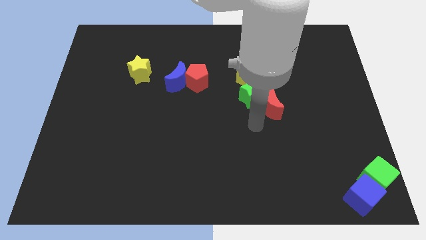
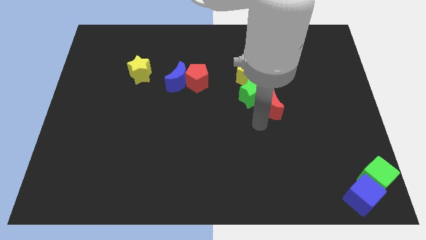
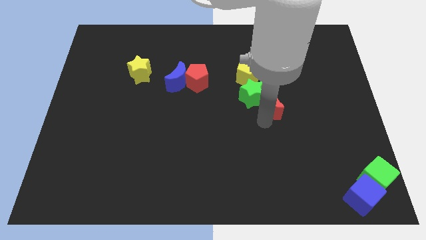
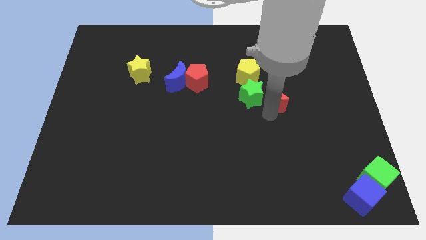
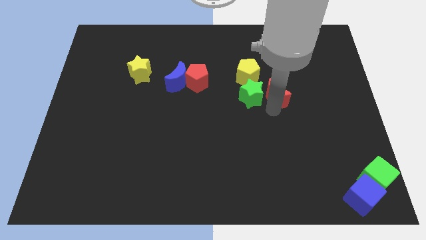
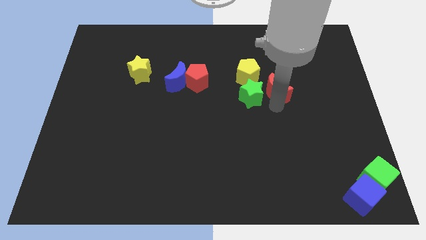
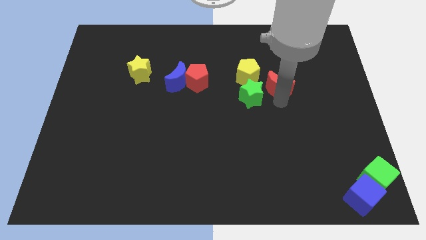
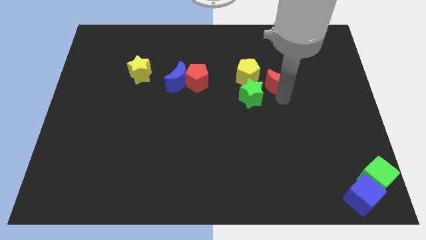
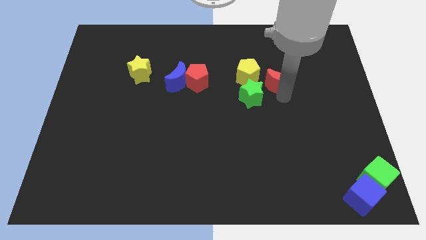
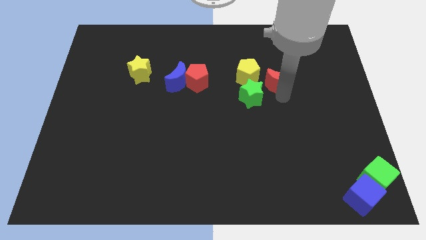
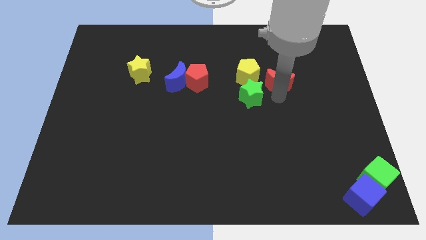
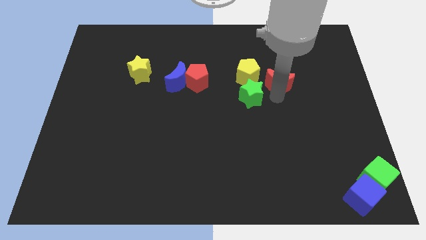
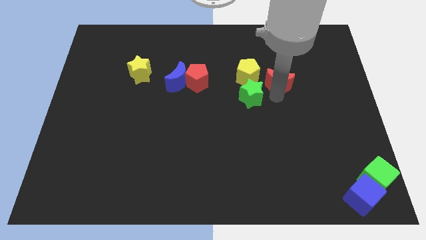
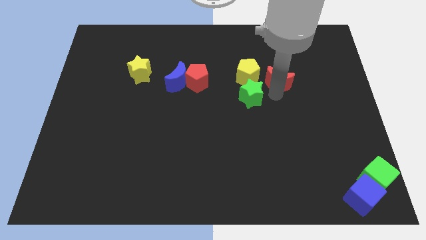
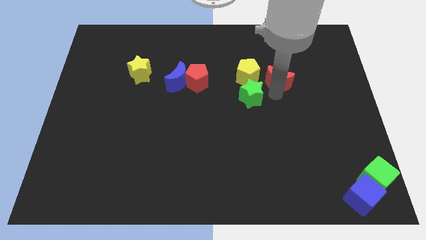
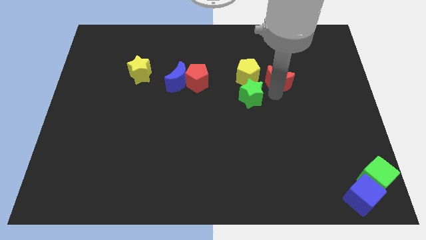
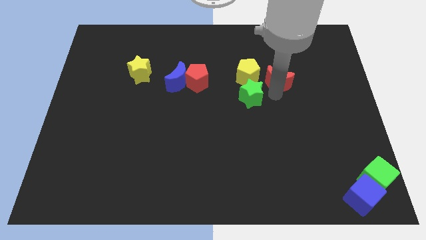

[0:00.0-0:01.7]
move the red crescent to the right of the yellow pentagon

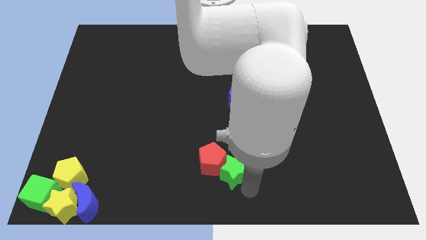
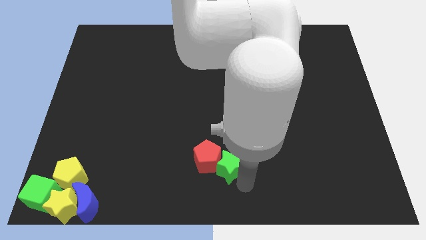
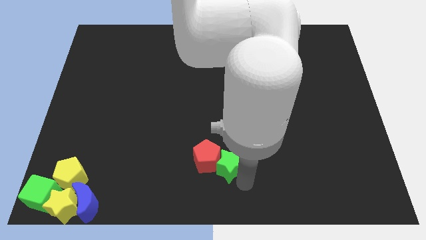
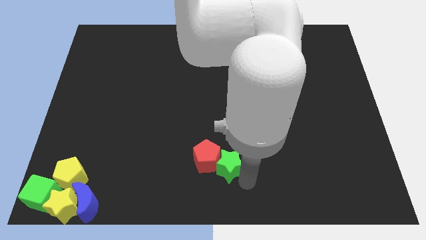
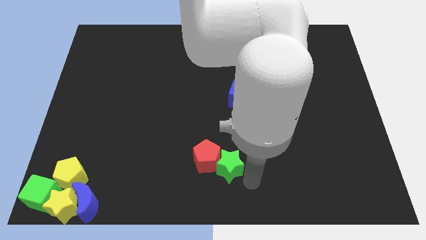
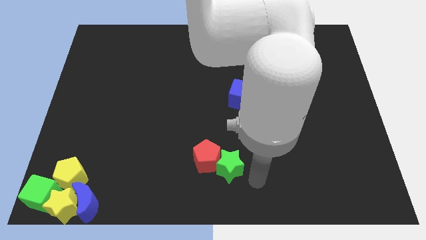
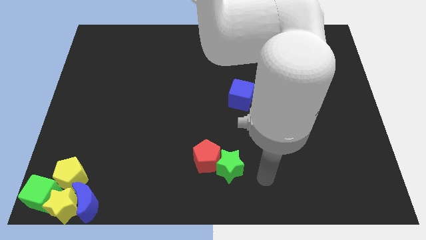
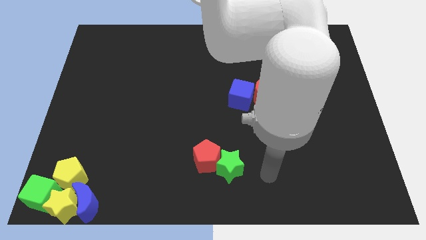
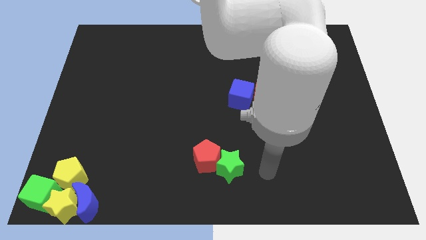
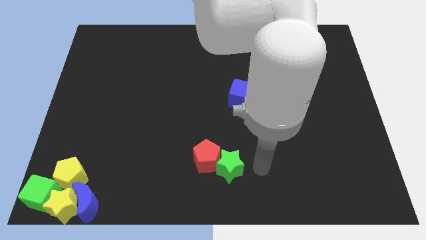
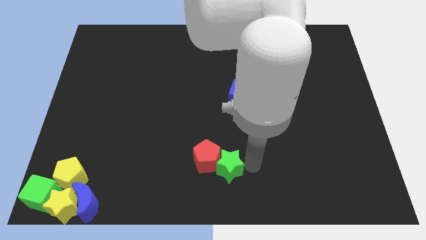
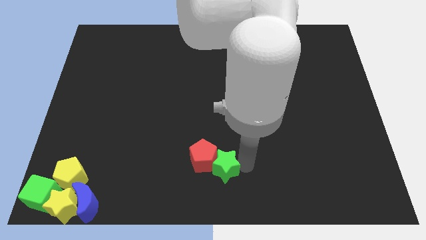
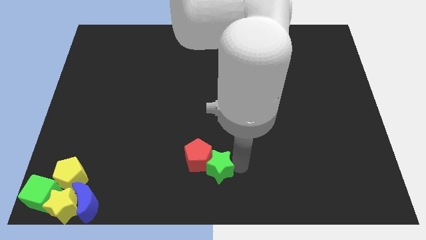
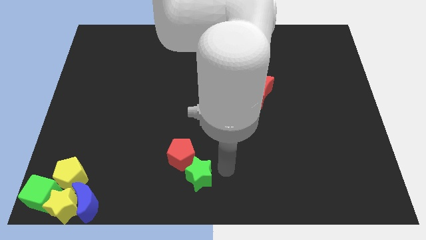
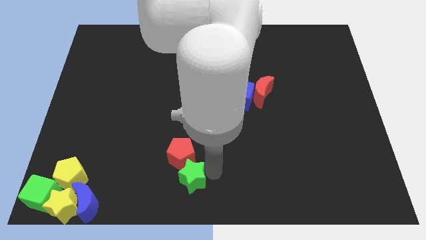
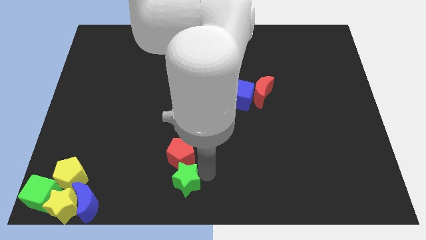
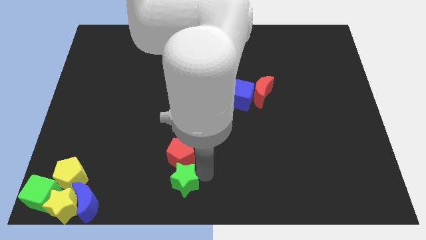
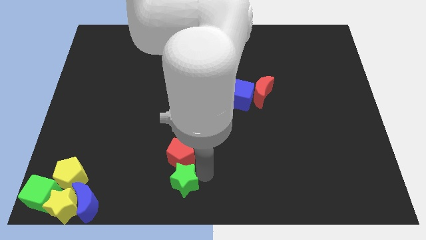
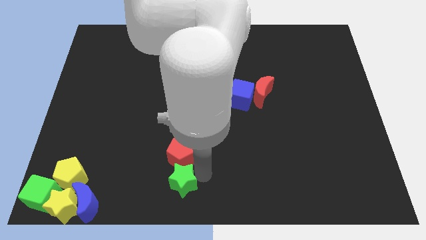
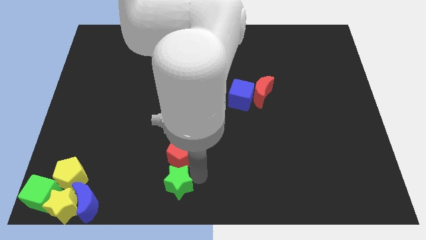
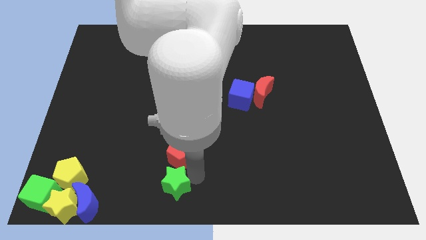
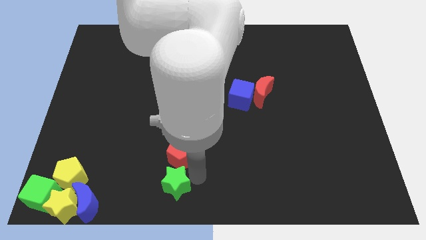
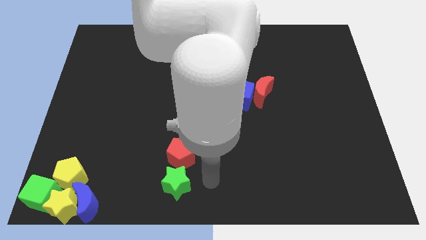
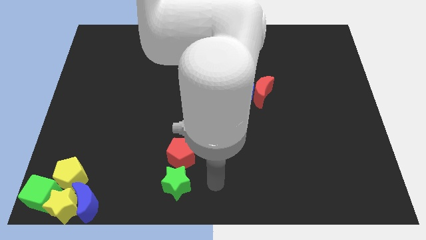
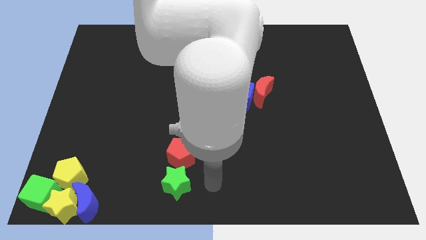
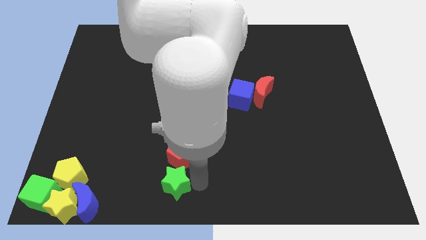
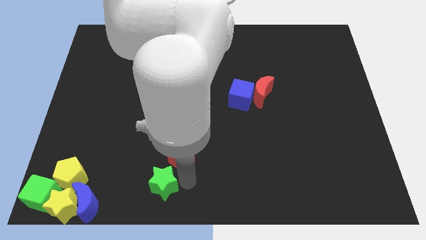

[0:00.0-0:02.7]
move the green star below the red pentagon

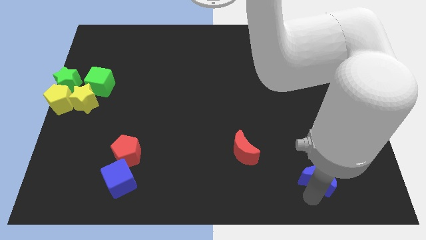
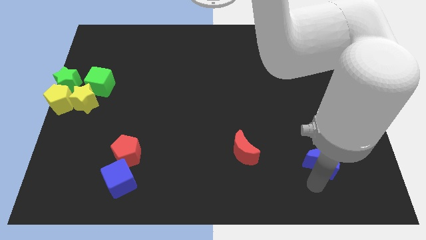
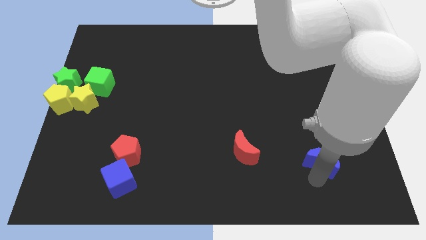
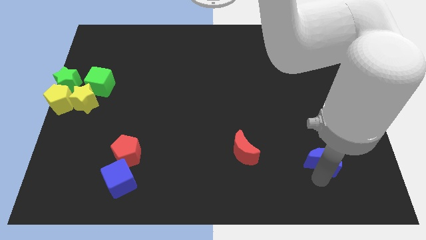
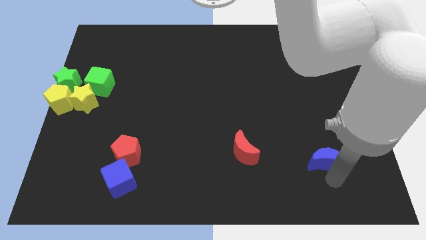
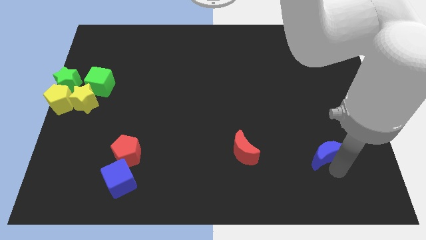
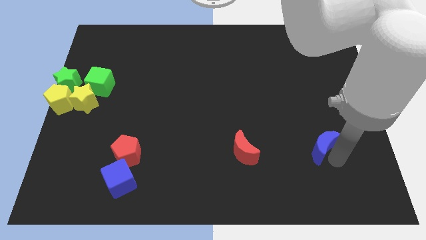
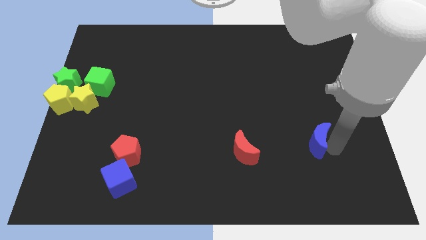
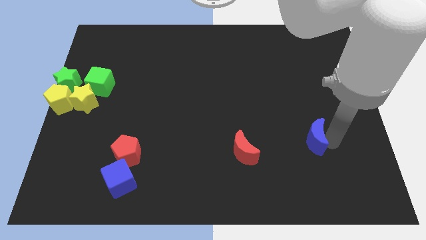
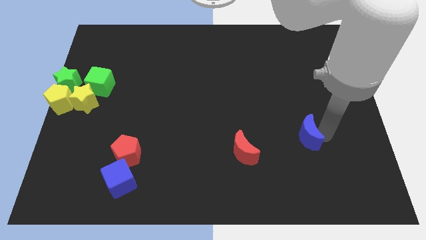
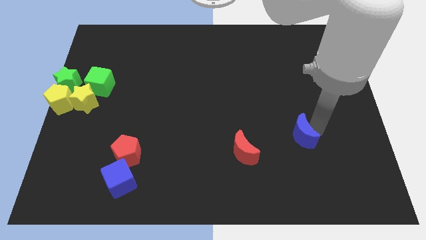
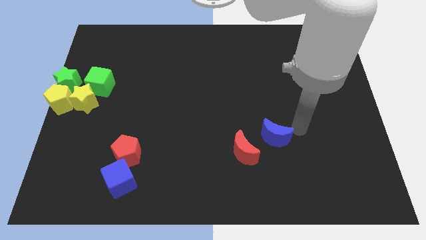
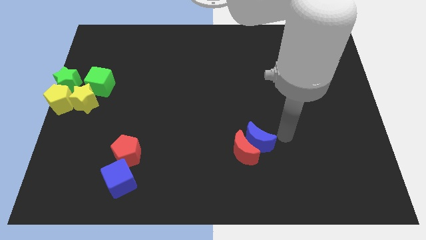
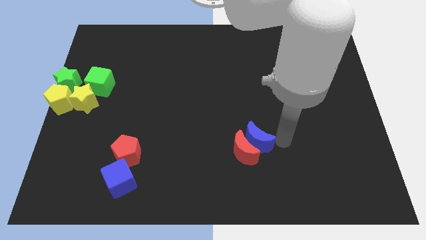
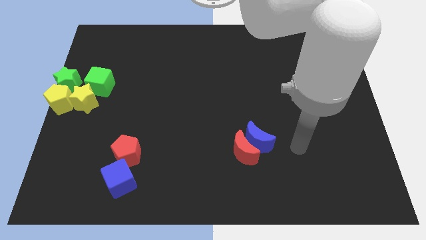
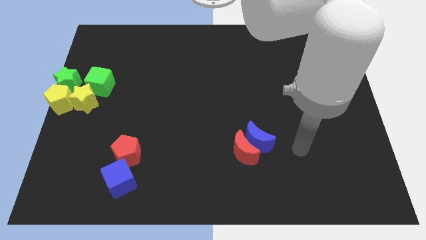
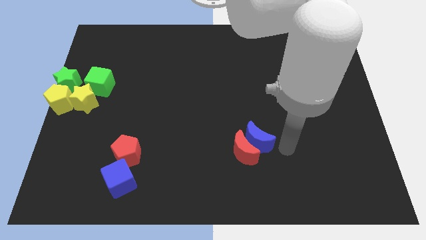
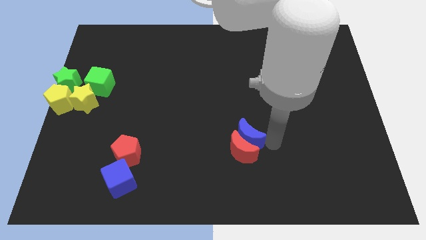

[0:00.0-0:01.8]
drag blue moon into red moon

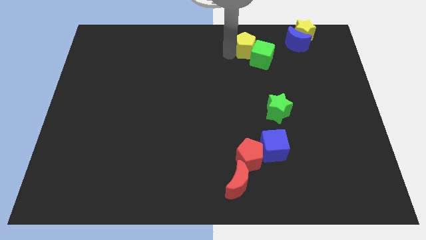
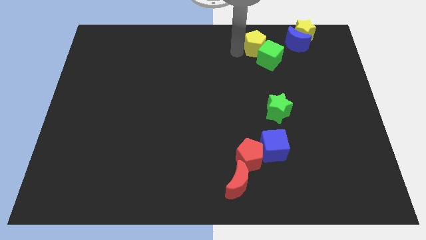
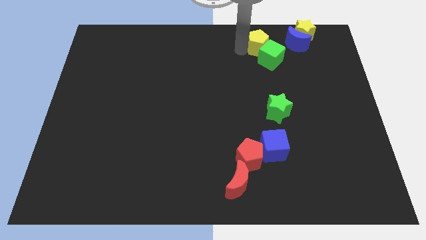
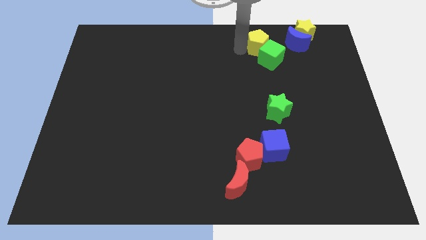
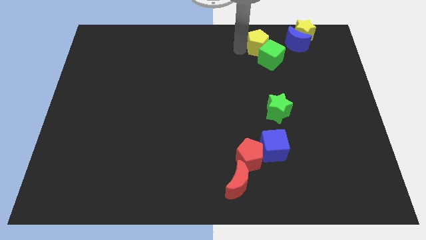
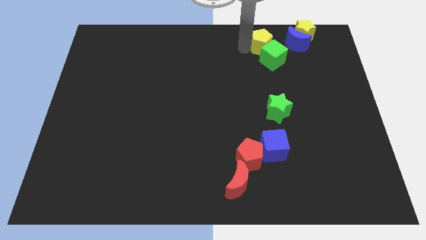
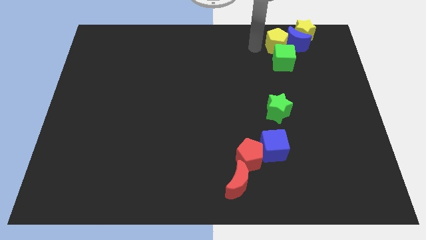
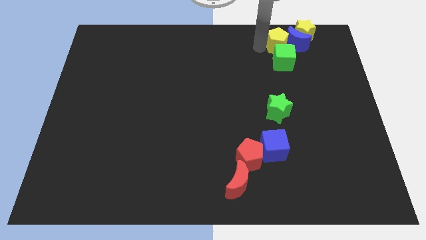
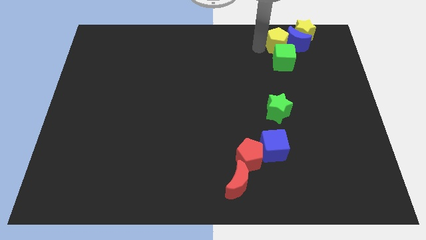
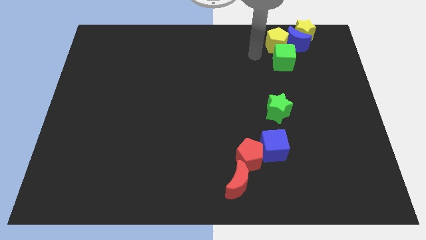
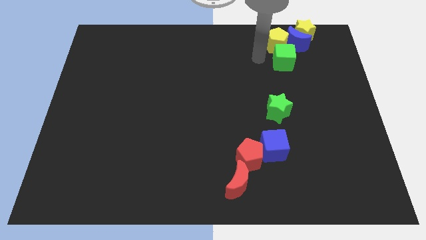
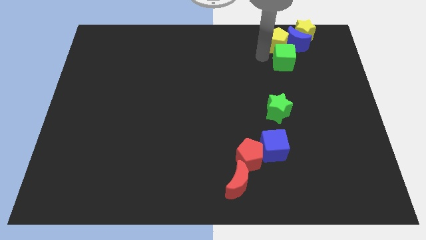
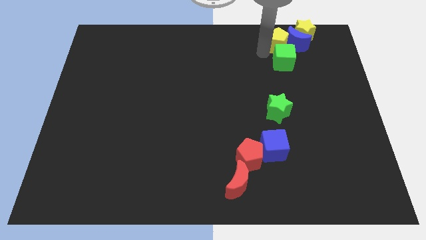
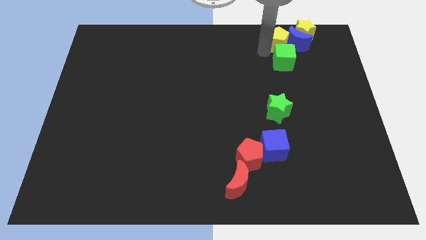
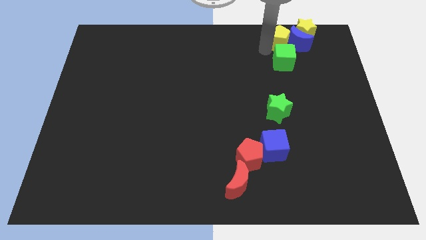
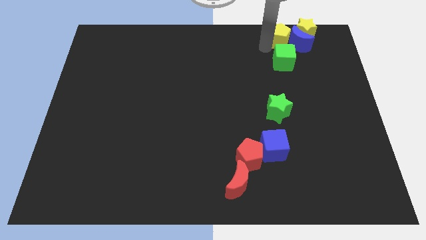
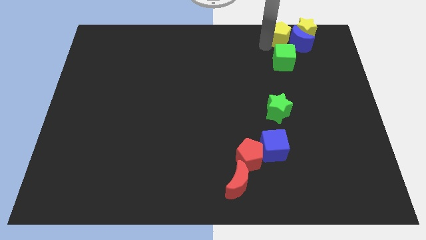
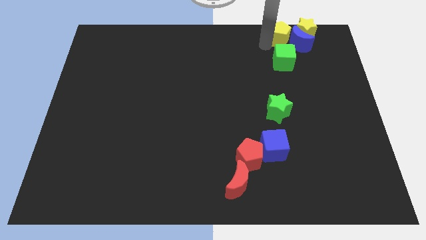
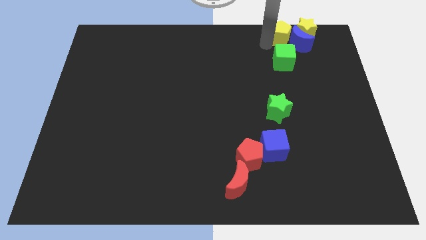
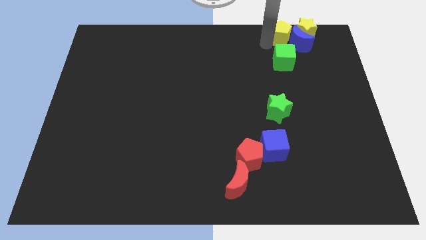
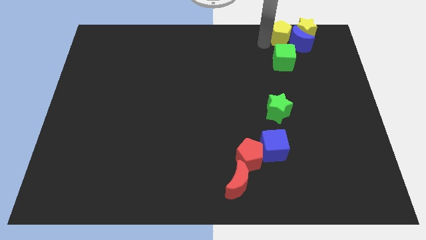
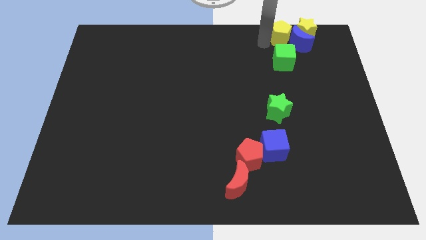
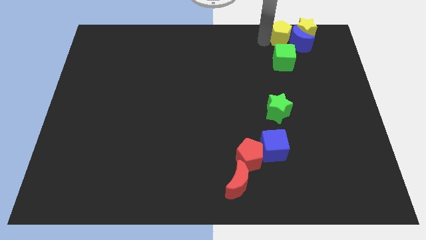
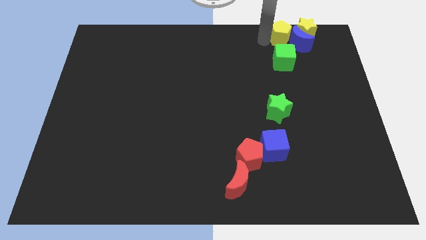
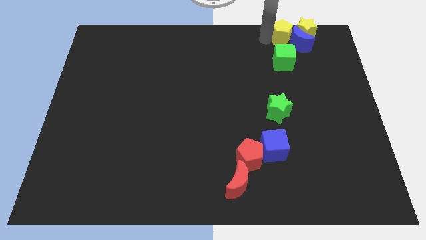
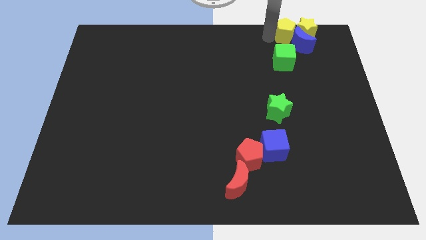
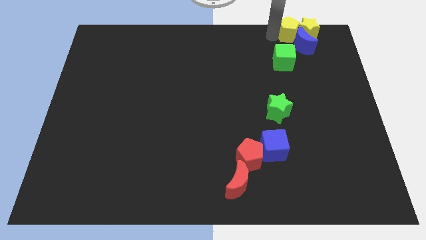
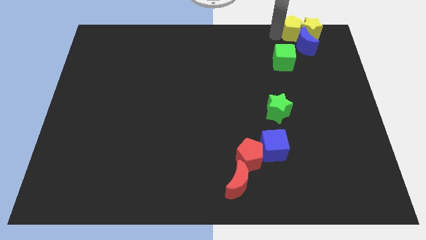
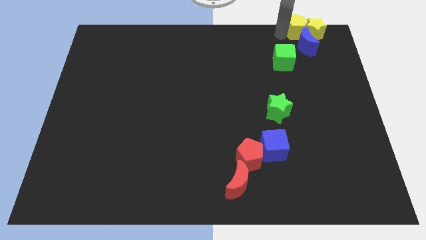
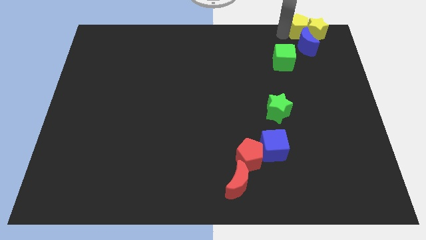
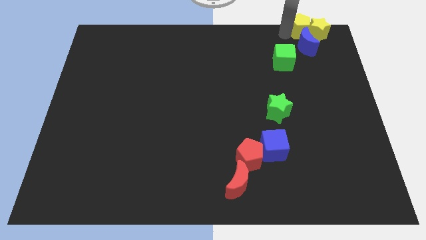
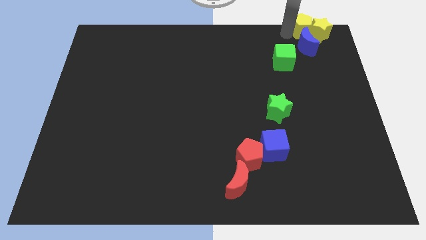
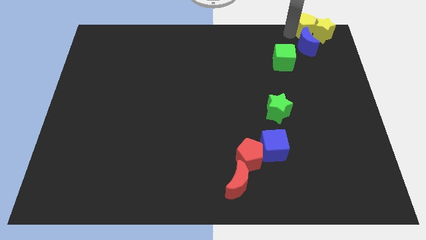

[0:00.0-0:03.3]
push yellow pentagon into yellow star
